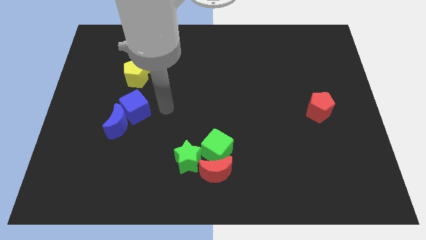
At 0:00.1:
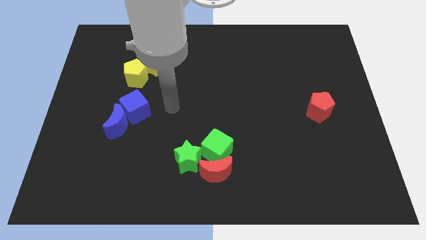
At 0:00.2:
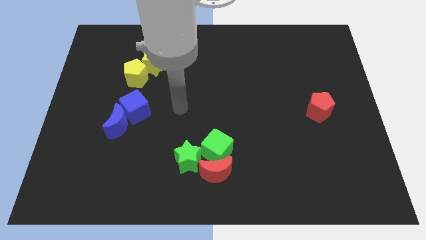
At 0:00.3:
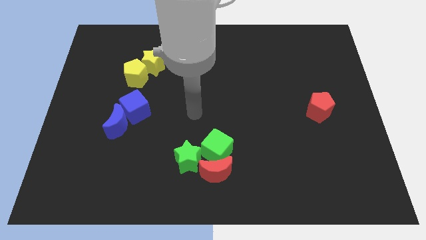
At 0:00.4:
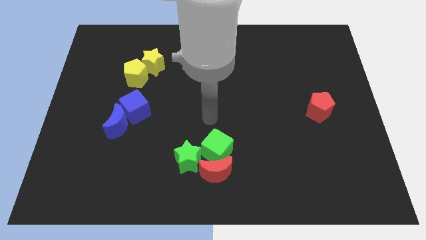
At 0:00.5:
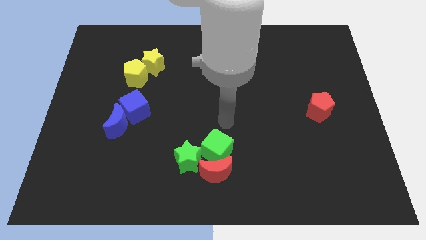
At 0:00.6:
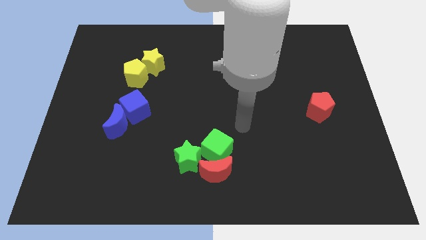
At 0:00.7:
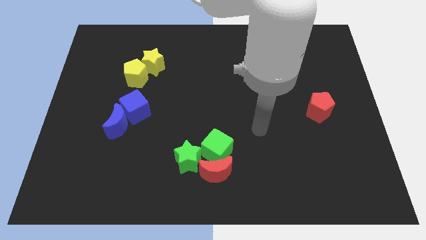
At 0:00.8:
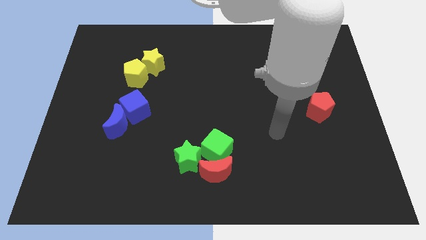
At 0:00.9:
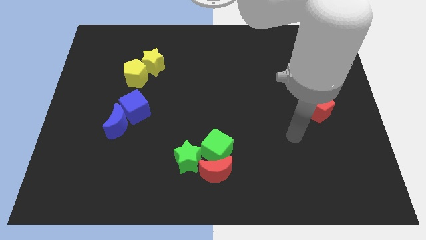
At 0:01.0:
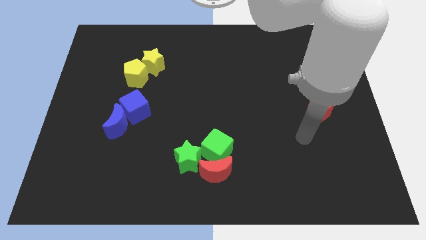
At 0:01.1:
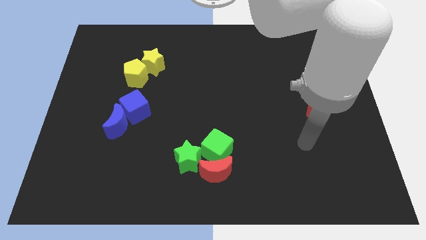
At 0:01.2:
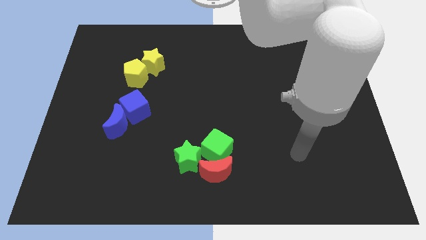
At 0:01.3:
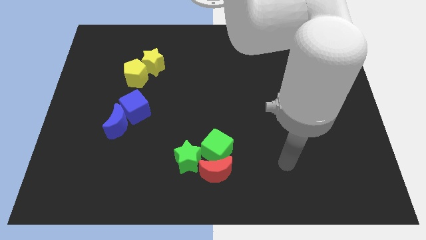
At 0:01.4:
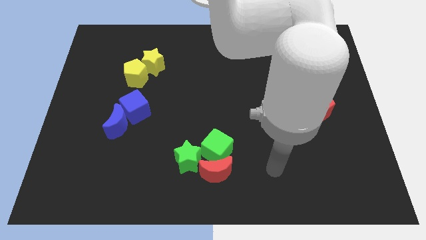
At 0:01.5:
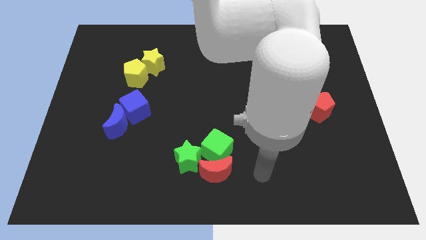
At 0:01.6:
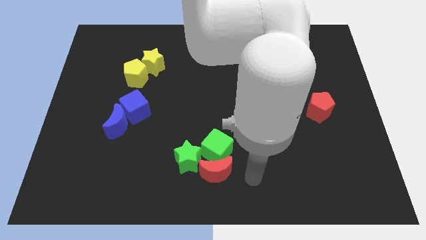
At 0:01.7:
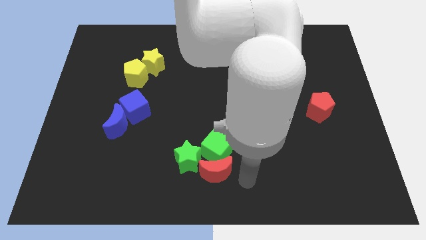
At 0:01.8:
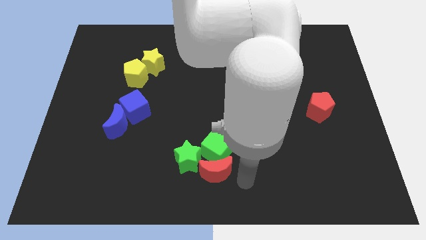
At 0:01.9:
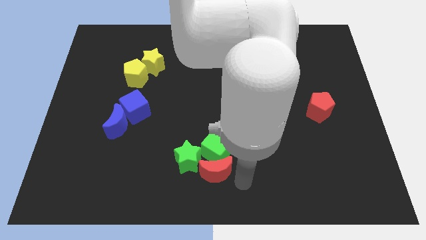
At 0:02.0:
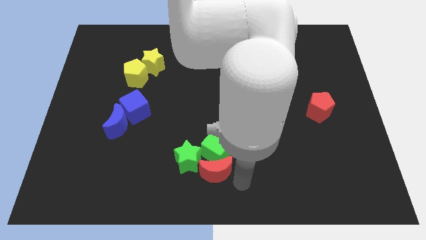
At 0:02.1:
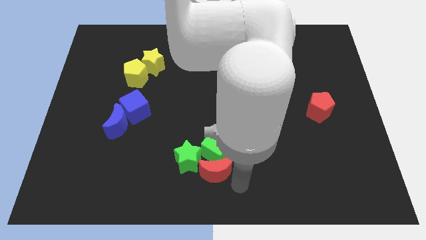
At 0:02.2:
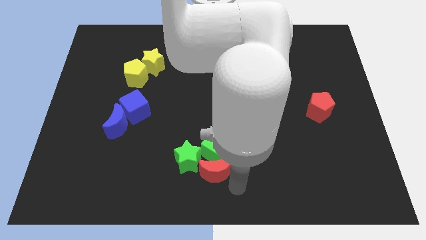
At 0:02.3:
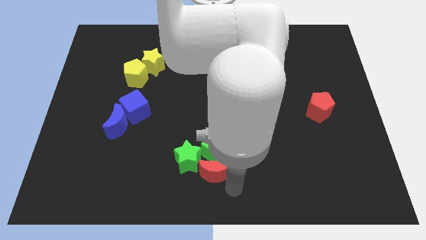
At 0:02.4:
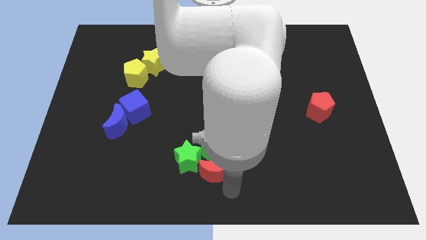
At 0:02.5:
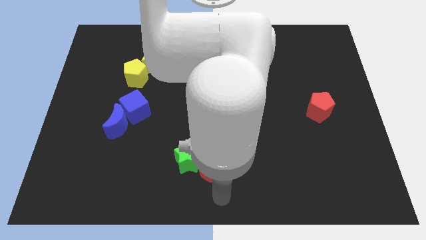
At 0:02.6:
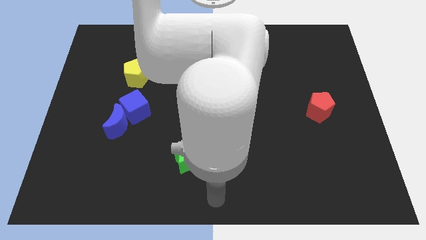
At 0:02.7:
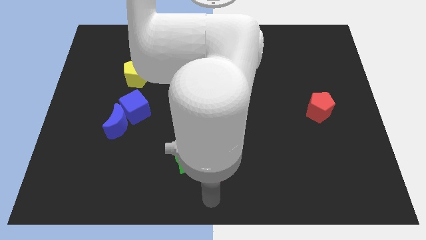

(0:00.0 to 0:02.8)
move your arm and point below red moon

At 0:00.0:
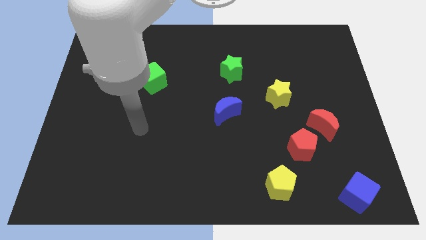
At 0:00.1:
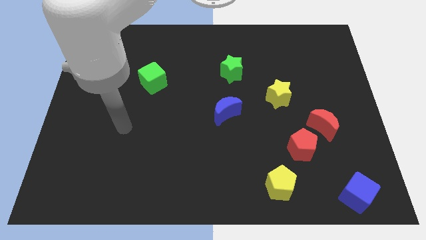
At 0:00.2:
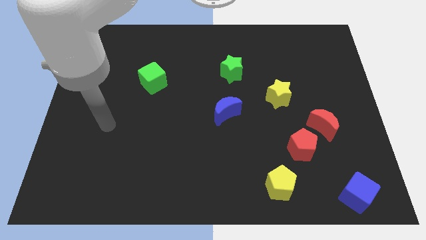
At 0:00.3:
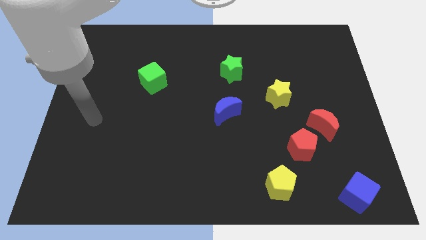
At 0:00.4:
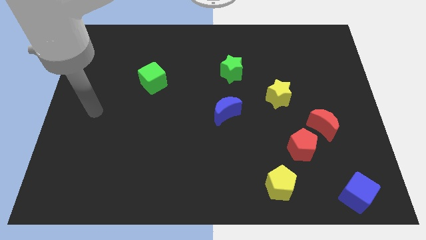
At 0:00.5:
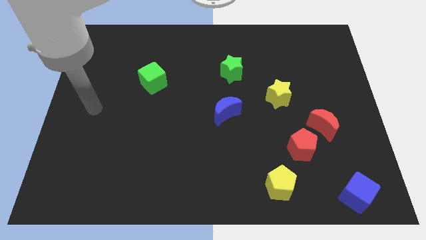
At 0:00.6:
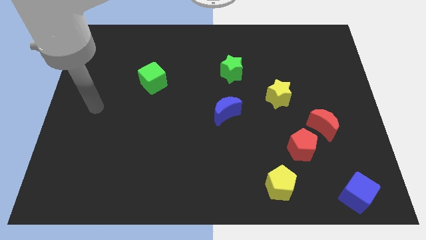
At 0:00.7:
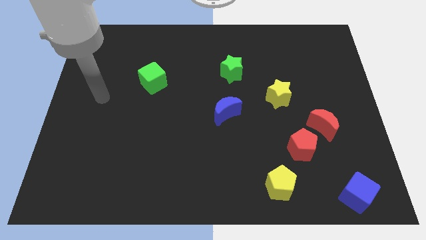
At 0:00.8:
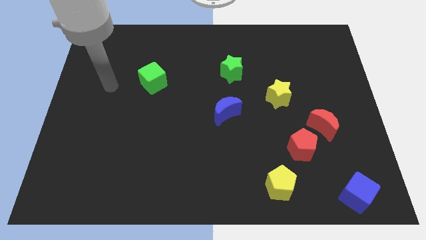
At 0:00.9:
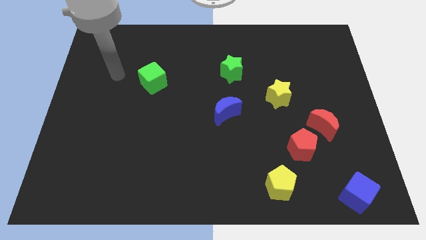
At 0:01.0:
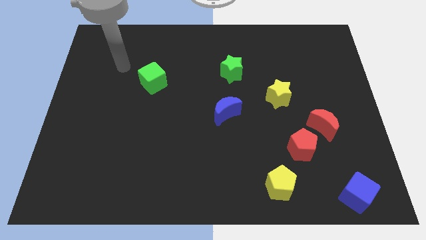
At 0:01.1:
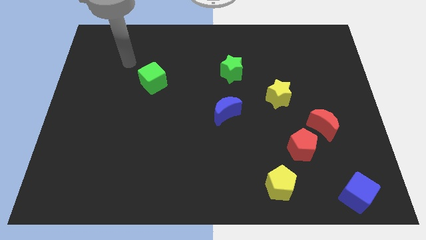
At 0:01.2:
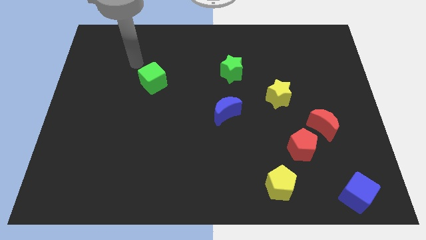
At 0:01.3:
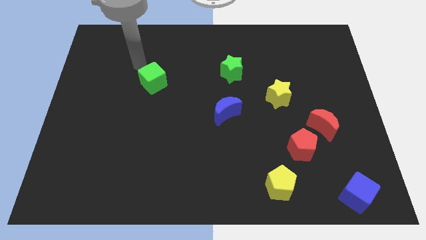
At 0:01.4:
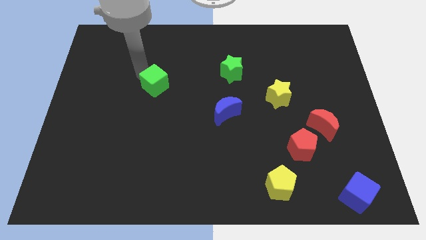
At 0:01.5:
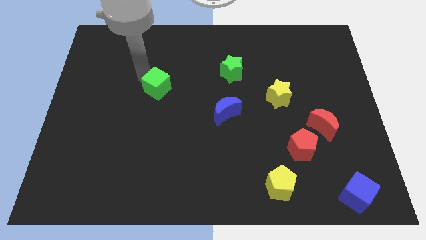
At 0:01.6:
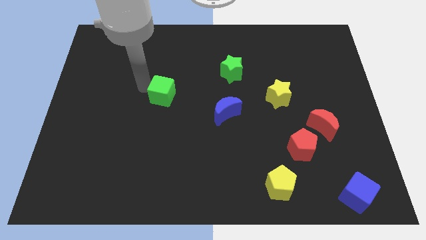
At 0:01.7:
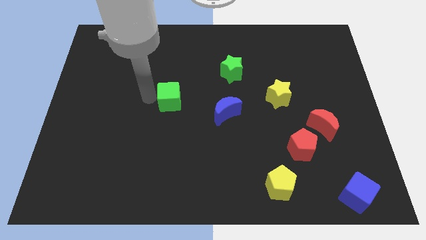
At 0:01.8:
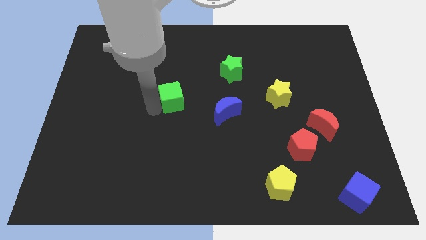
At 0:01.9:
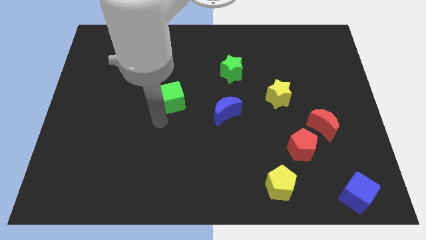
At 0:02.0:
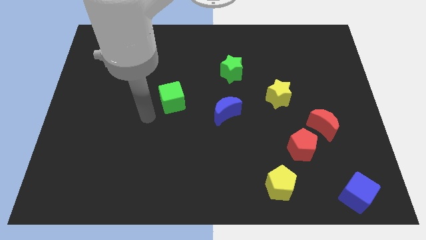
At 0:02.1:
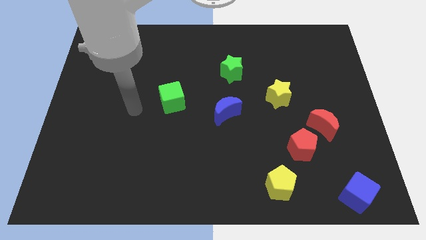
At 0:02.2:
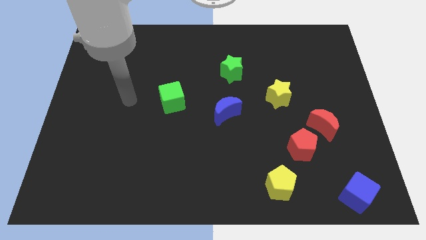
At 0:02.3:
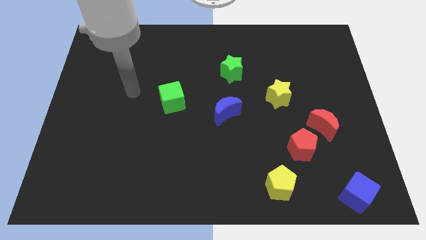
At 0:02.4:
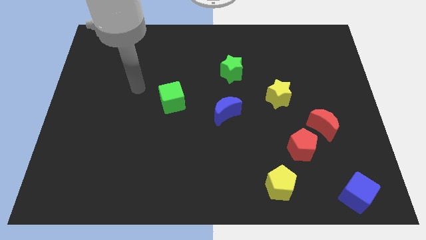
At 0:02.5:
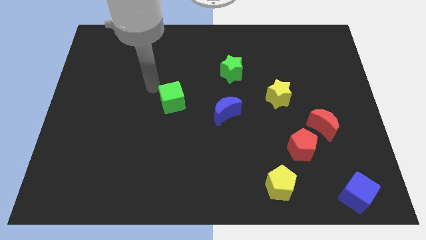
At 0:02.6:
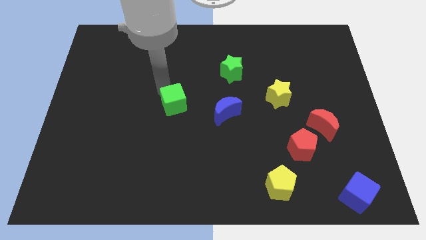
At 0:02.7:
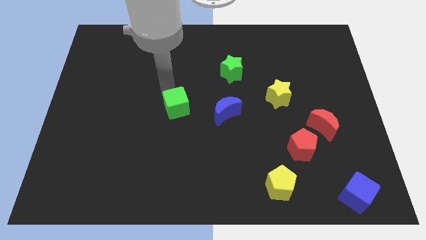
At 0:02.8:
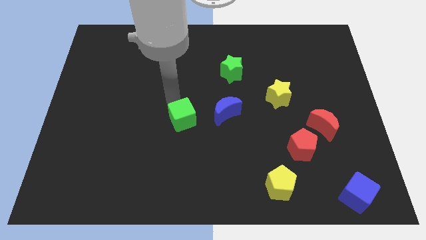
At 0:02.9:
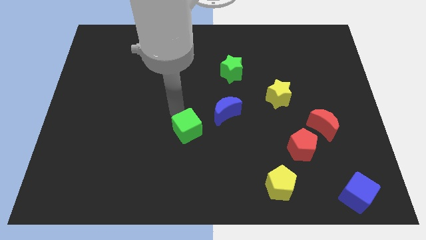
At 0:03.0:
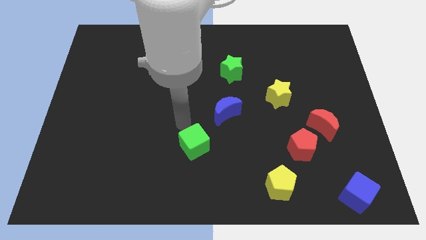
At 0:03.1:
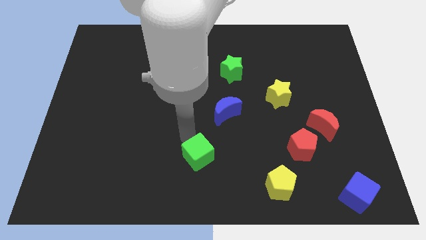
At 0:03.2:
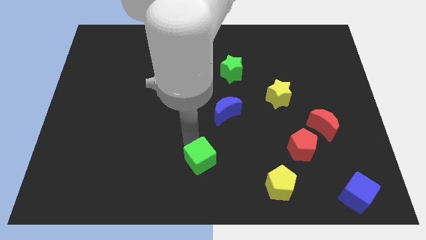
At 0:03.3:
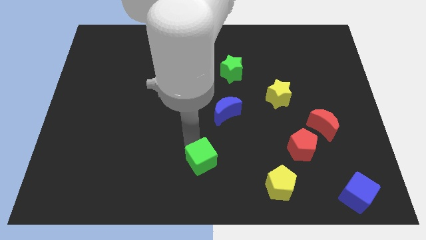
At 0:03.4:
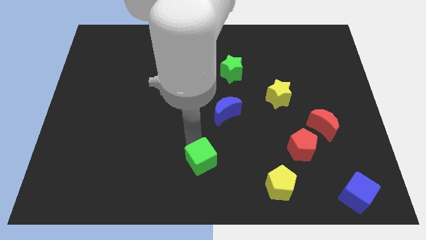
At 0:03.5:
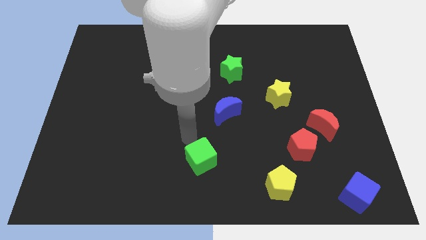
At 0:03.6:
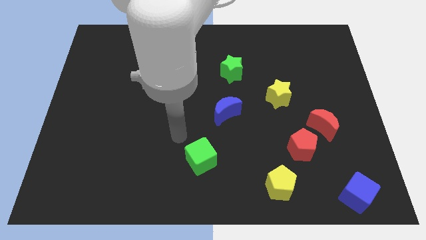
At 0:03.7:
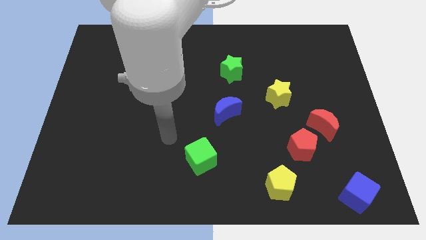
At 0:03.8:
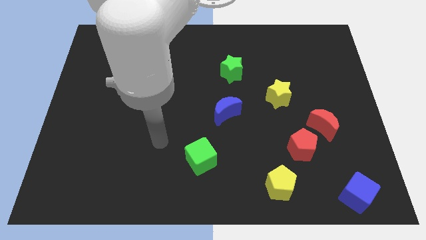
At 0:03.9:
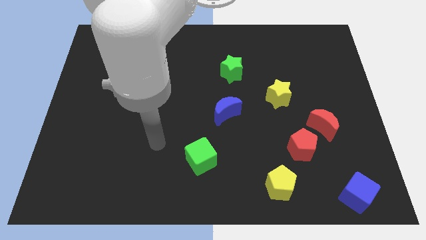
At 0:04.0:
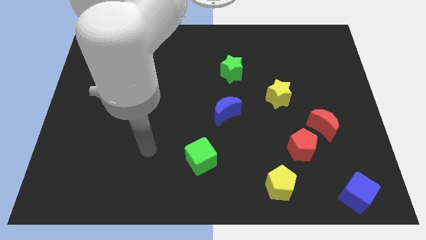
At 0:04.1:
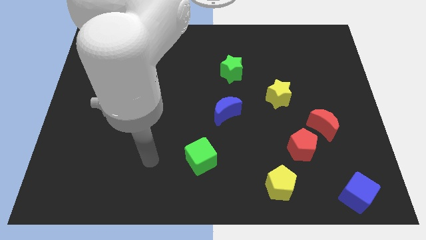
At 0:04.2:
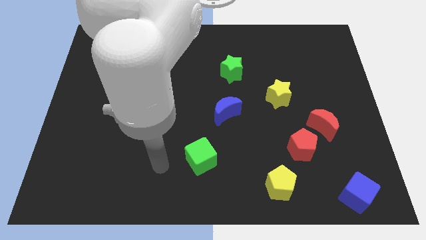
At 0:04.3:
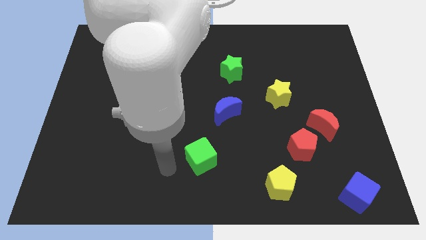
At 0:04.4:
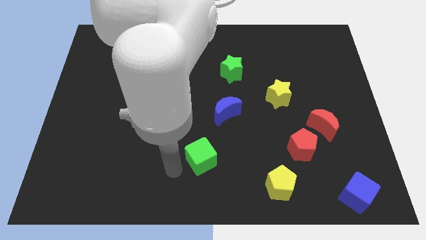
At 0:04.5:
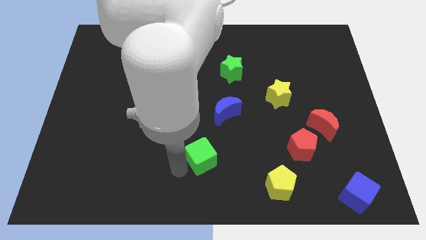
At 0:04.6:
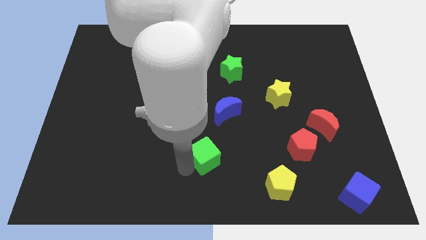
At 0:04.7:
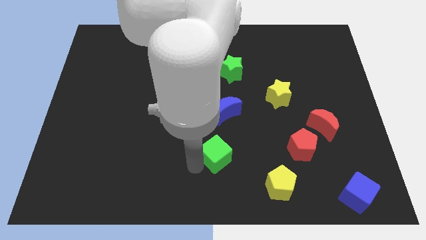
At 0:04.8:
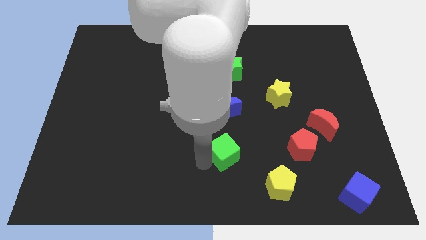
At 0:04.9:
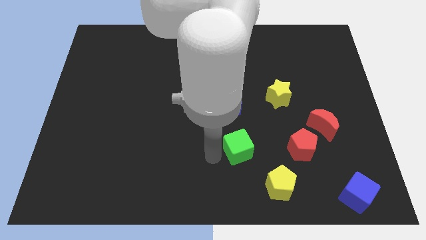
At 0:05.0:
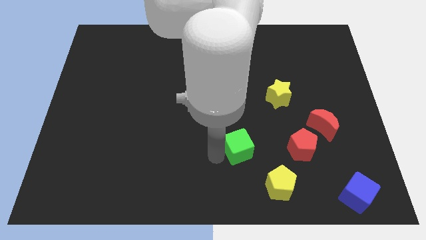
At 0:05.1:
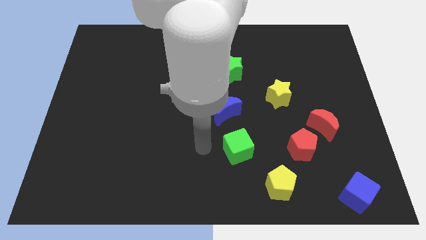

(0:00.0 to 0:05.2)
push the green cube close towards the yellow pentagon

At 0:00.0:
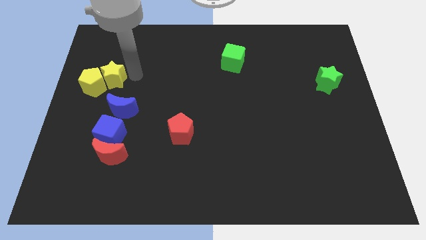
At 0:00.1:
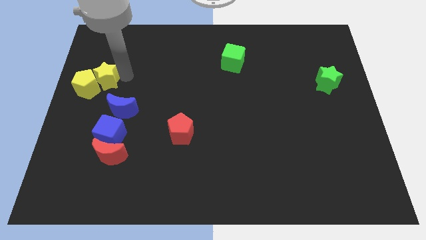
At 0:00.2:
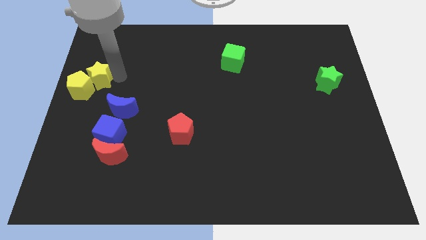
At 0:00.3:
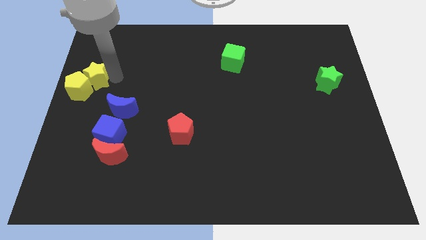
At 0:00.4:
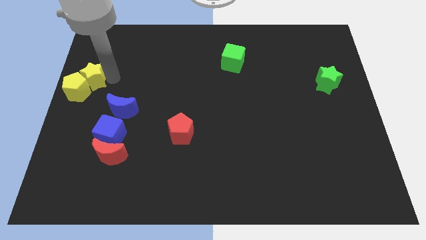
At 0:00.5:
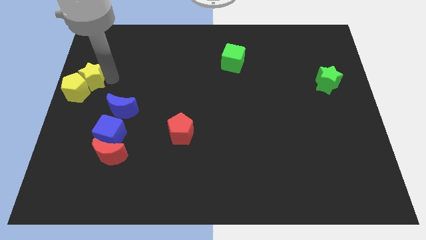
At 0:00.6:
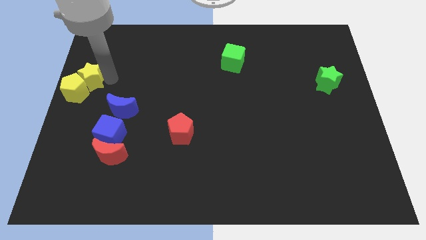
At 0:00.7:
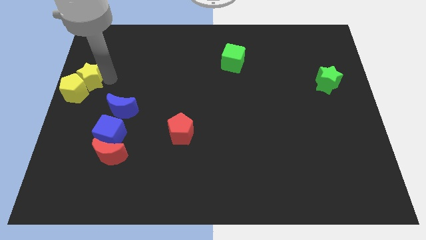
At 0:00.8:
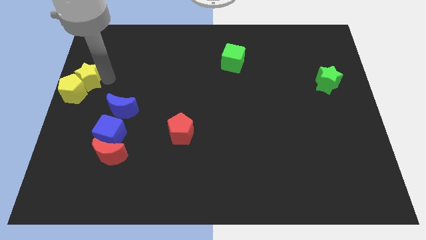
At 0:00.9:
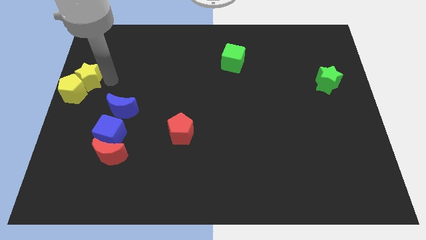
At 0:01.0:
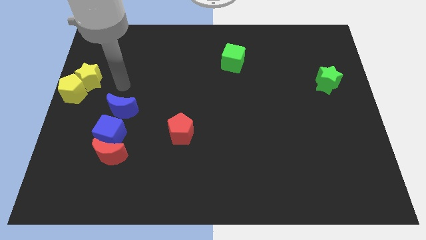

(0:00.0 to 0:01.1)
move yellow blocks to the center left of the board
